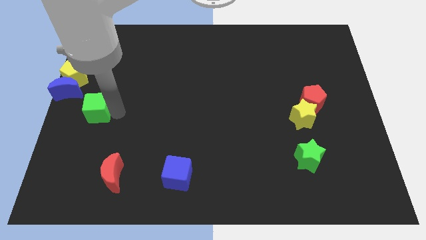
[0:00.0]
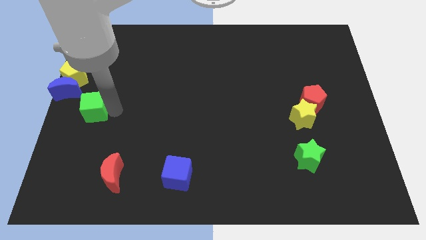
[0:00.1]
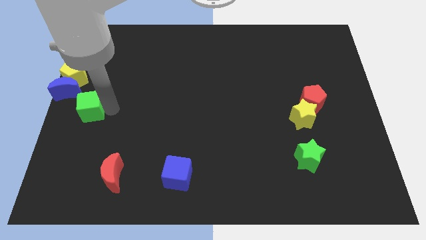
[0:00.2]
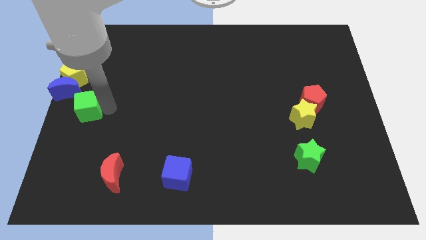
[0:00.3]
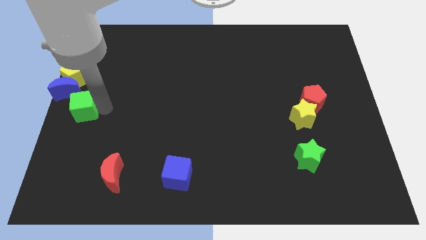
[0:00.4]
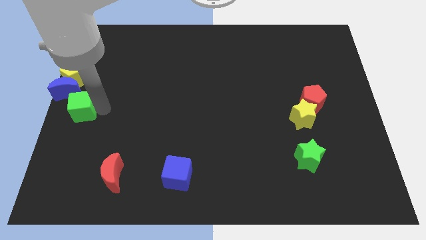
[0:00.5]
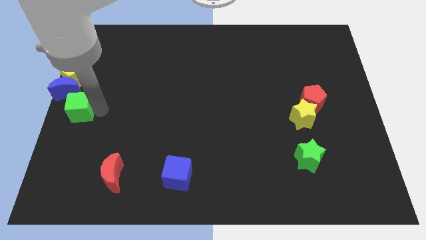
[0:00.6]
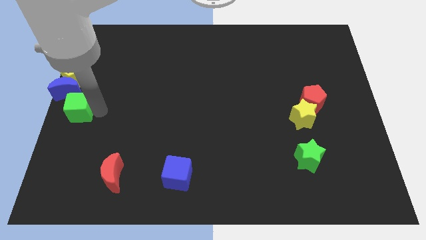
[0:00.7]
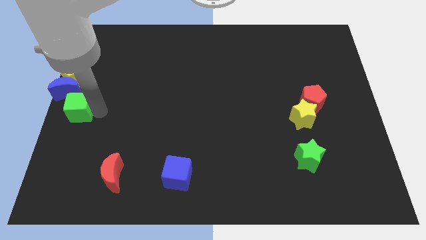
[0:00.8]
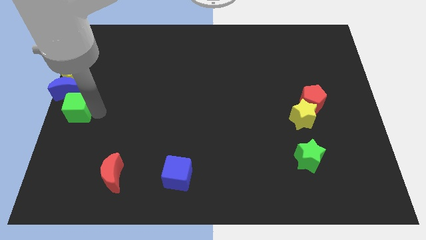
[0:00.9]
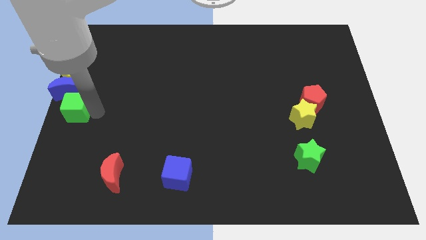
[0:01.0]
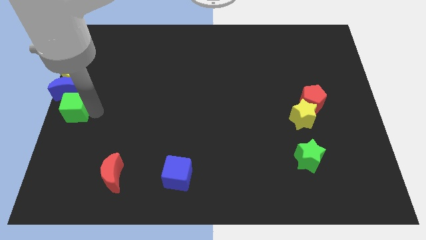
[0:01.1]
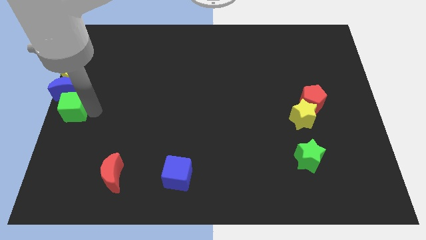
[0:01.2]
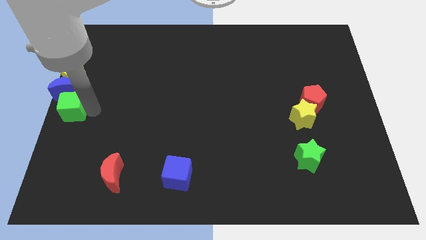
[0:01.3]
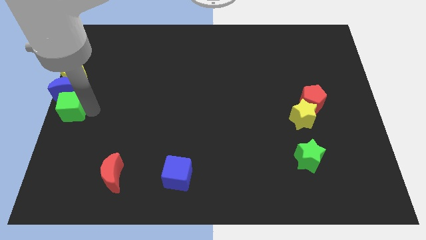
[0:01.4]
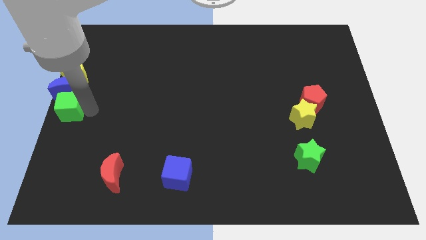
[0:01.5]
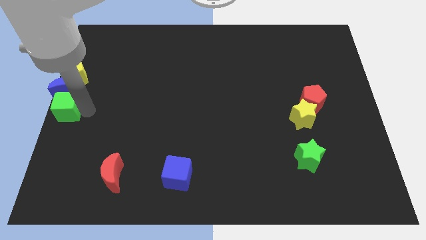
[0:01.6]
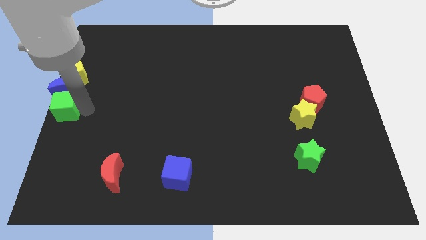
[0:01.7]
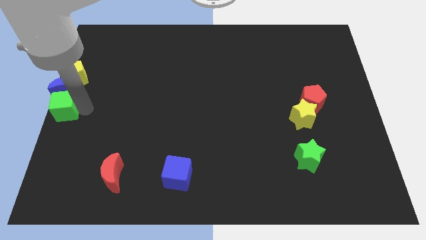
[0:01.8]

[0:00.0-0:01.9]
place the green cube below the blue crescent

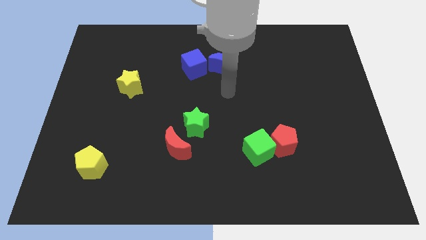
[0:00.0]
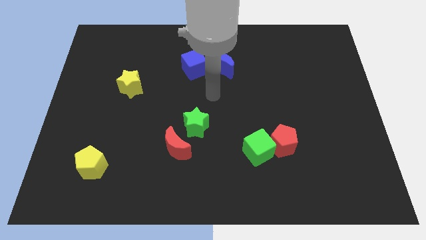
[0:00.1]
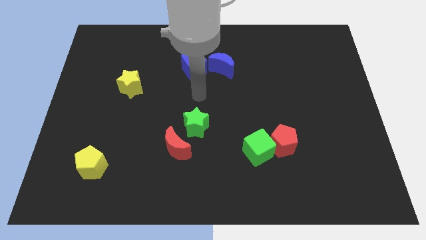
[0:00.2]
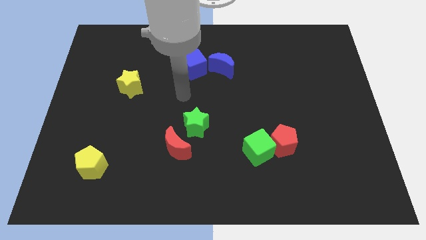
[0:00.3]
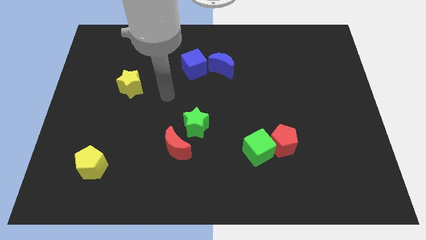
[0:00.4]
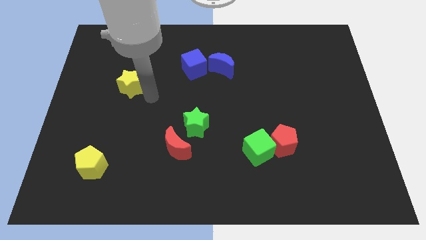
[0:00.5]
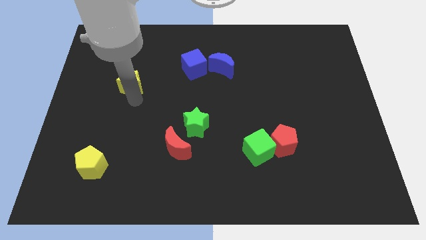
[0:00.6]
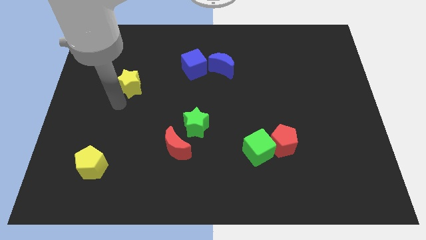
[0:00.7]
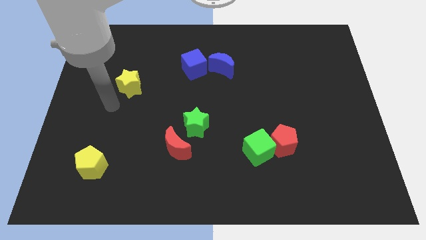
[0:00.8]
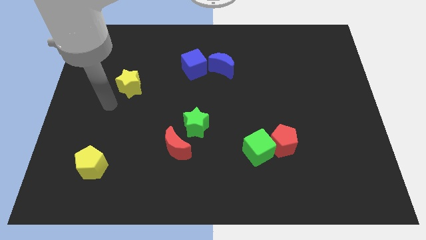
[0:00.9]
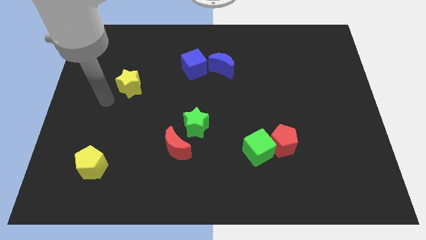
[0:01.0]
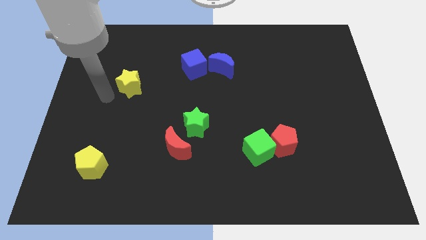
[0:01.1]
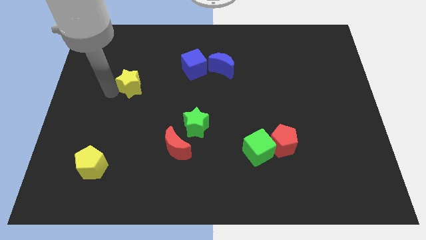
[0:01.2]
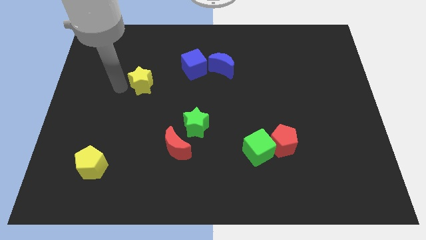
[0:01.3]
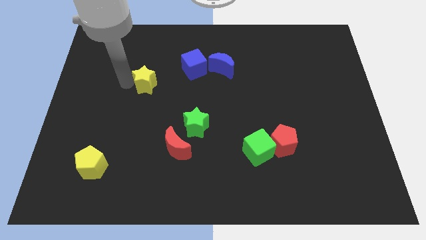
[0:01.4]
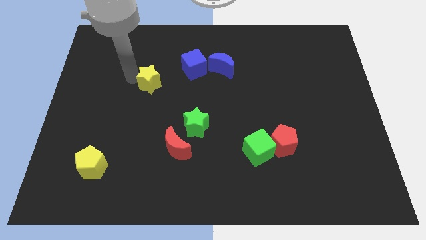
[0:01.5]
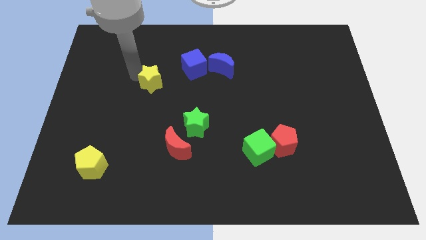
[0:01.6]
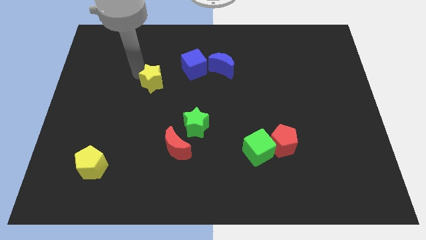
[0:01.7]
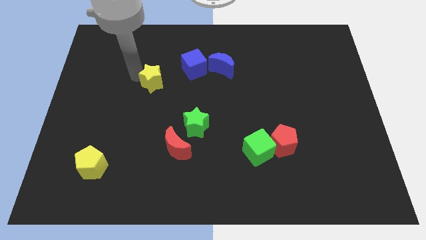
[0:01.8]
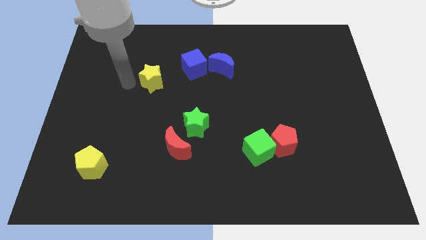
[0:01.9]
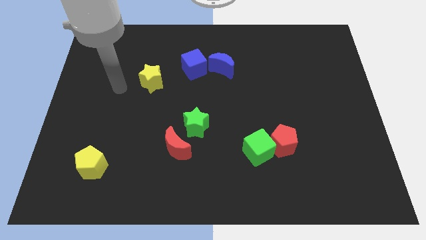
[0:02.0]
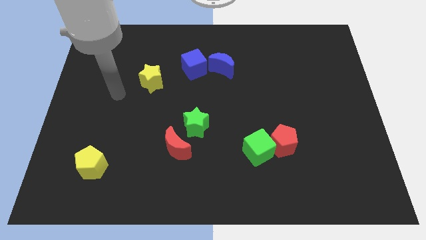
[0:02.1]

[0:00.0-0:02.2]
slide yellow star towards the left of blue cube

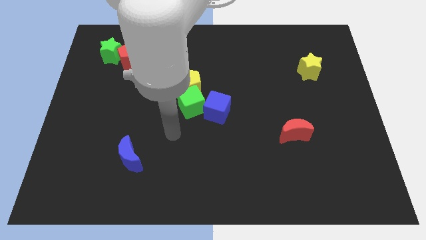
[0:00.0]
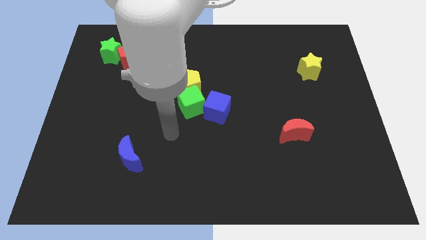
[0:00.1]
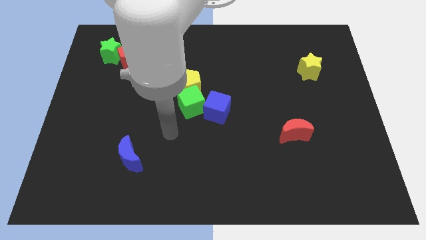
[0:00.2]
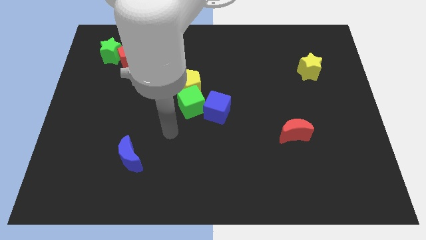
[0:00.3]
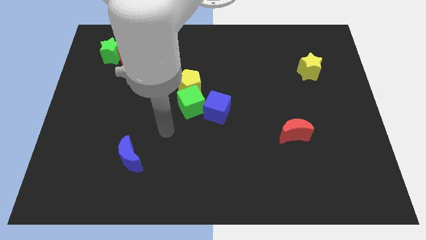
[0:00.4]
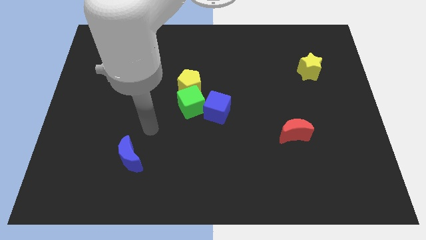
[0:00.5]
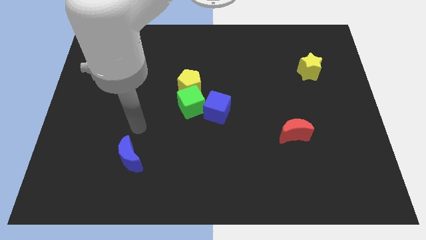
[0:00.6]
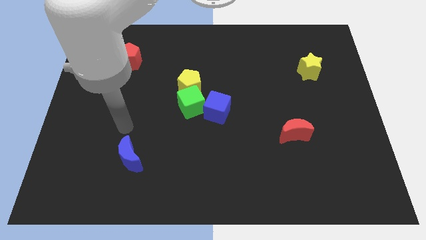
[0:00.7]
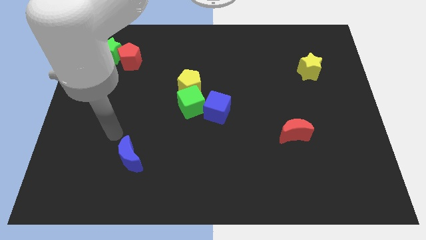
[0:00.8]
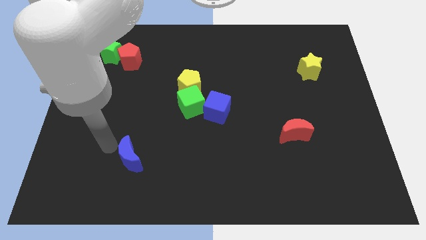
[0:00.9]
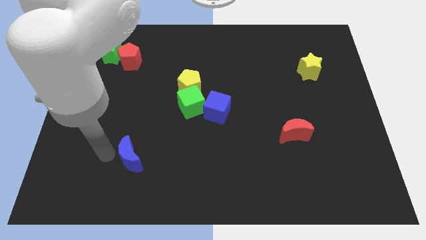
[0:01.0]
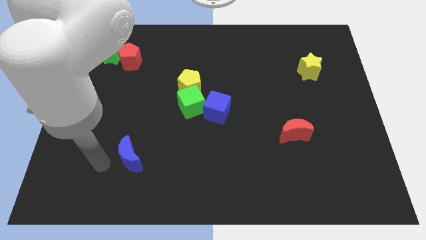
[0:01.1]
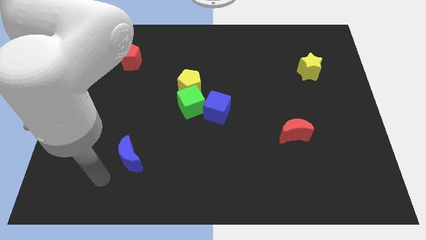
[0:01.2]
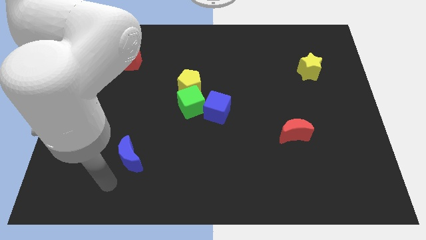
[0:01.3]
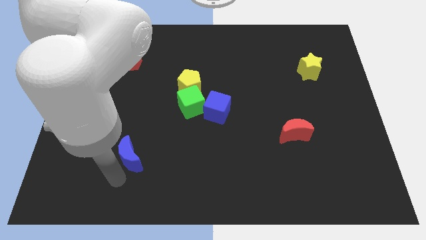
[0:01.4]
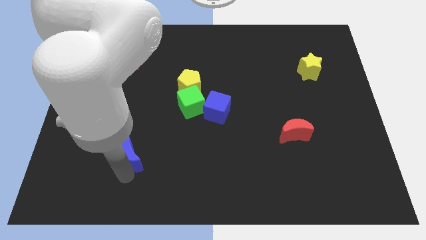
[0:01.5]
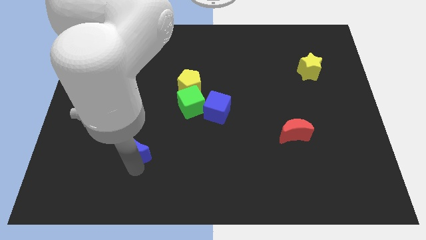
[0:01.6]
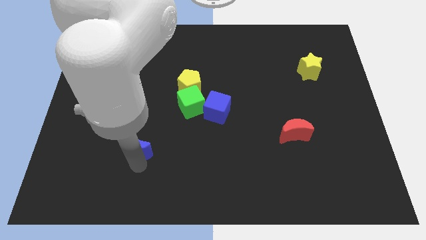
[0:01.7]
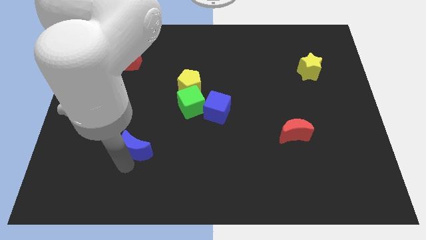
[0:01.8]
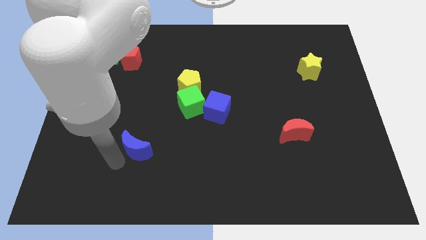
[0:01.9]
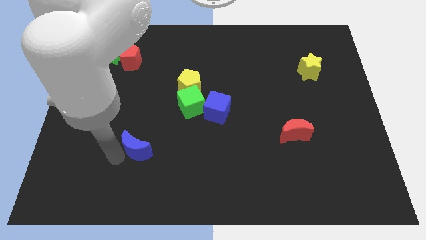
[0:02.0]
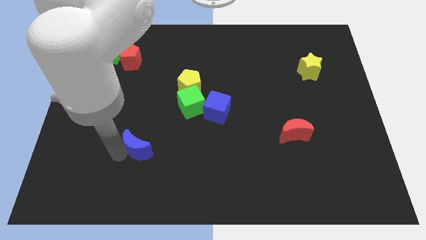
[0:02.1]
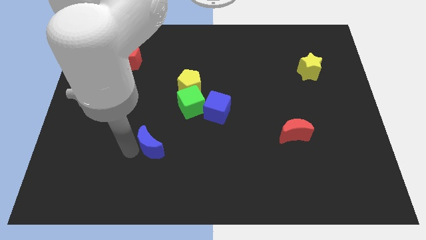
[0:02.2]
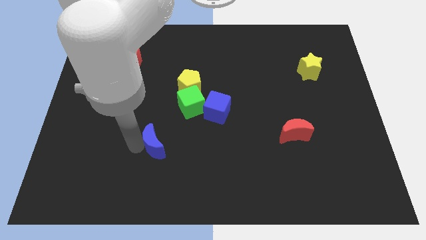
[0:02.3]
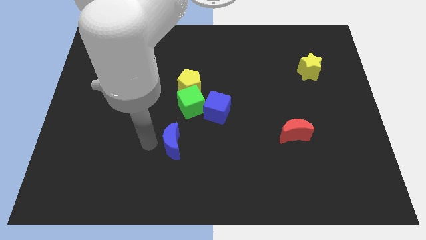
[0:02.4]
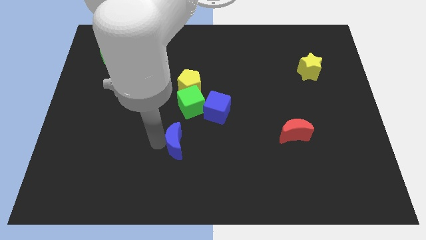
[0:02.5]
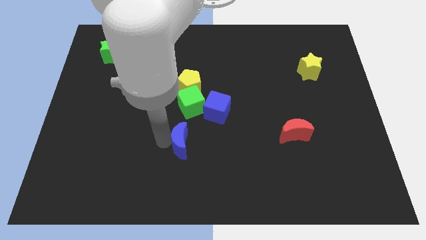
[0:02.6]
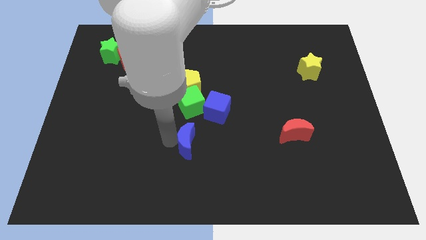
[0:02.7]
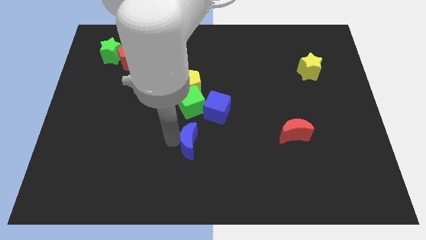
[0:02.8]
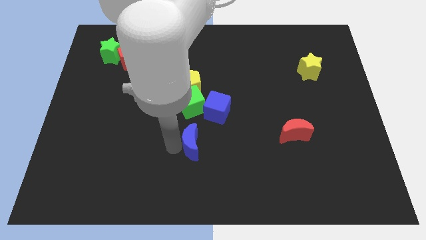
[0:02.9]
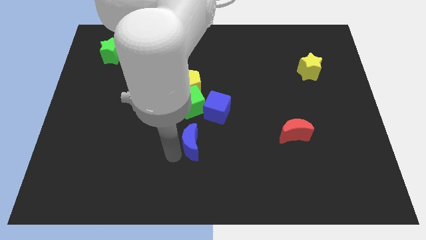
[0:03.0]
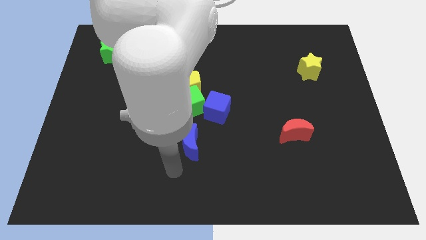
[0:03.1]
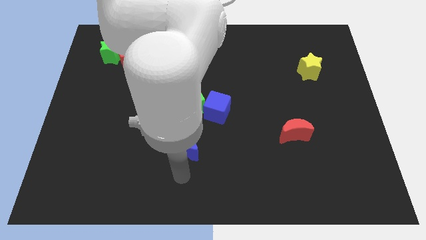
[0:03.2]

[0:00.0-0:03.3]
slide the blue moon below the green cube

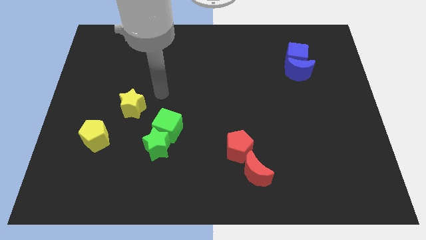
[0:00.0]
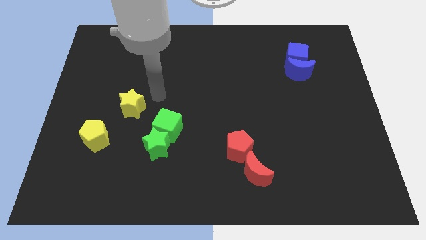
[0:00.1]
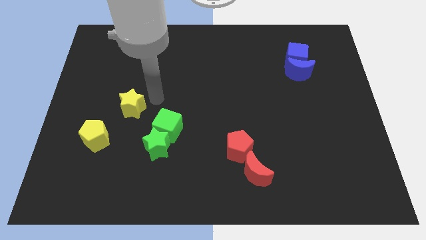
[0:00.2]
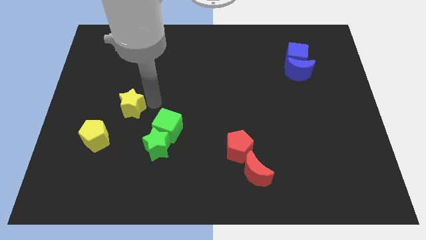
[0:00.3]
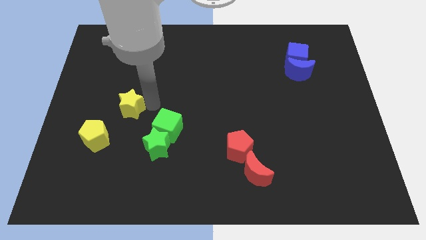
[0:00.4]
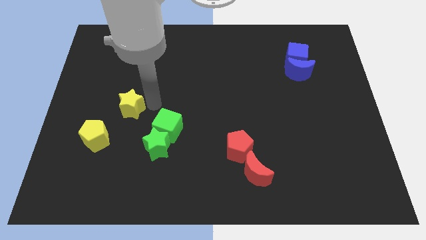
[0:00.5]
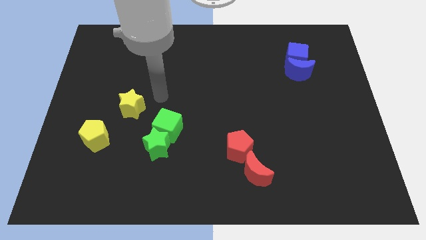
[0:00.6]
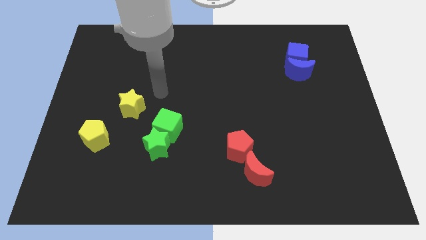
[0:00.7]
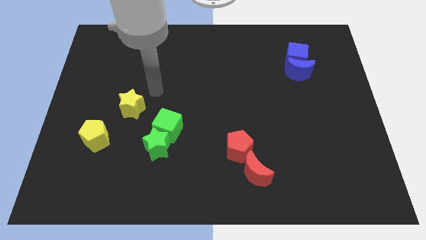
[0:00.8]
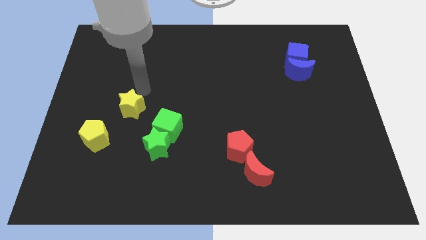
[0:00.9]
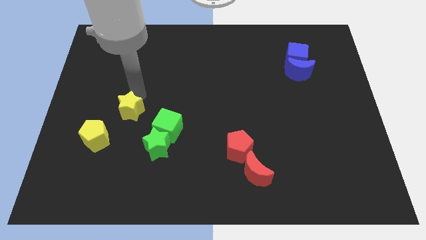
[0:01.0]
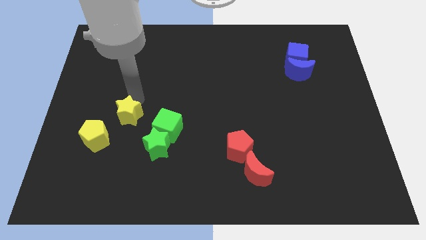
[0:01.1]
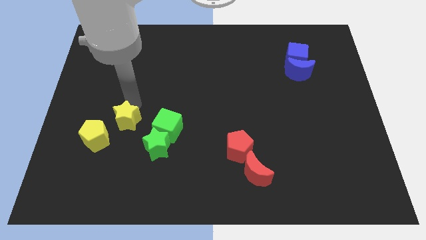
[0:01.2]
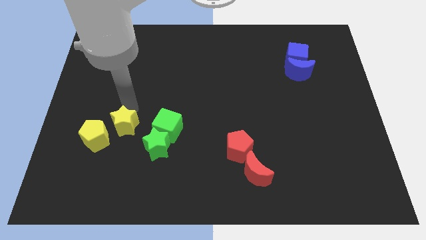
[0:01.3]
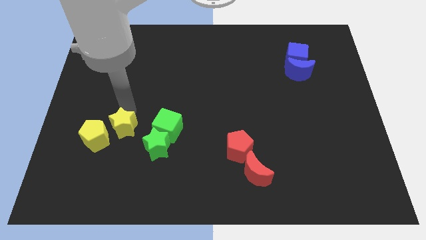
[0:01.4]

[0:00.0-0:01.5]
move the yellow star diagonally right to the yellow pentagon
